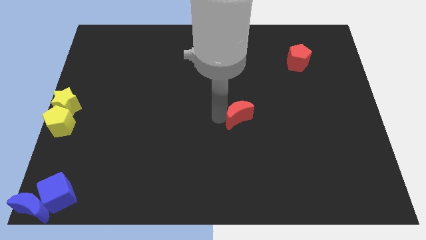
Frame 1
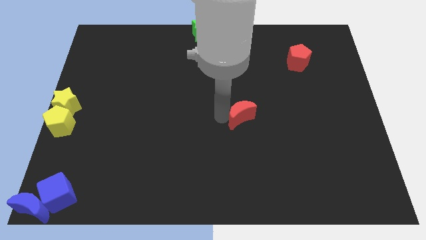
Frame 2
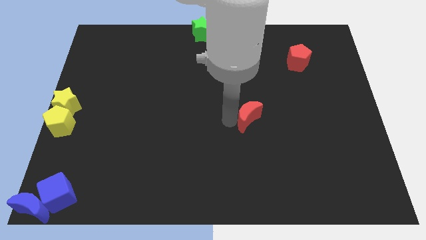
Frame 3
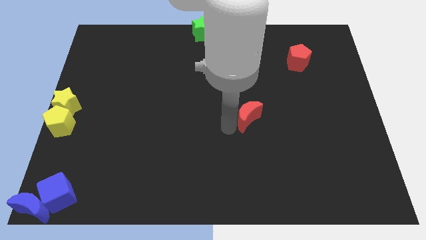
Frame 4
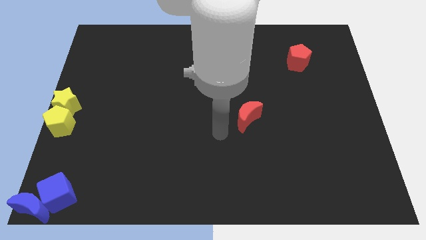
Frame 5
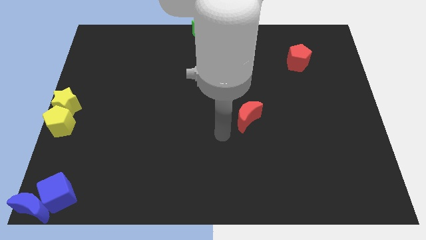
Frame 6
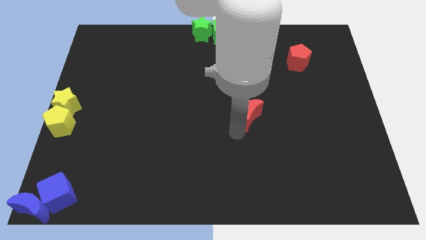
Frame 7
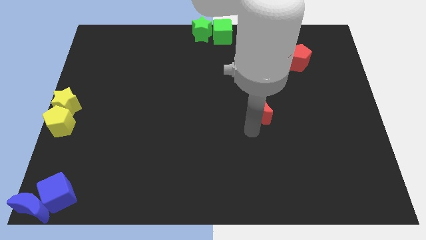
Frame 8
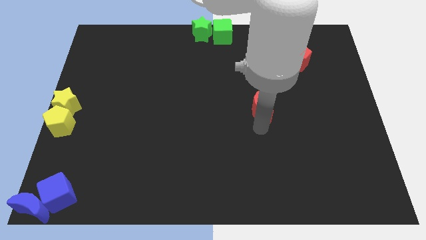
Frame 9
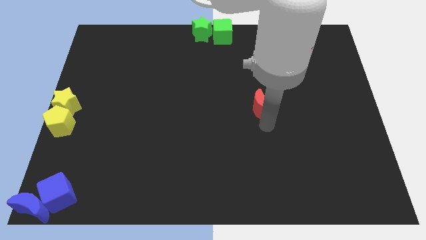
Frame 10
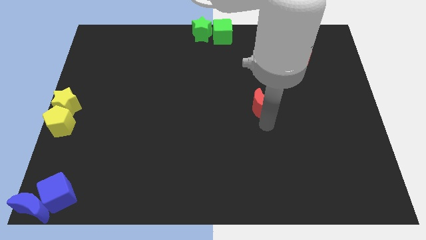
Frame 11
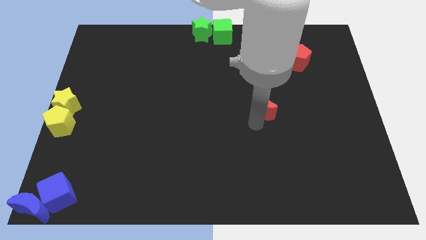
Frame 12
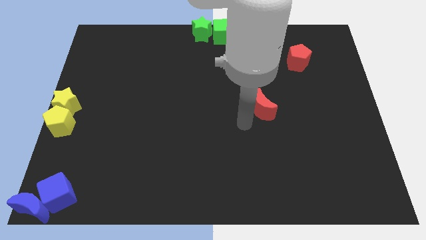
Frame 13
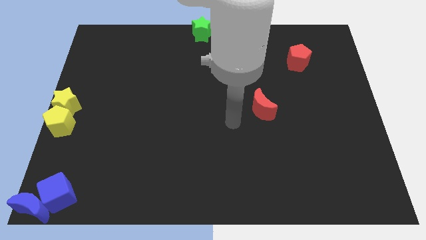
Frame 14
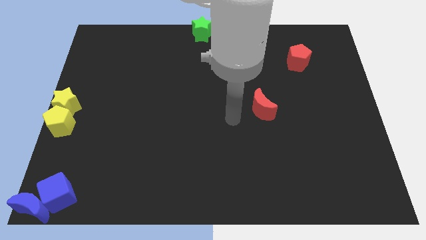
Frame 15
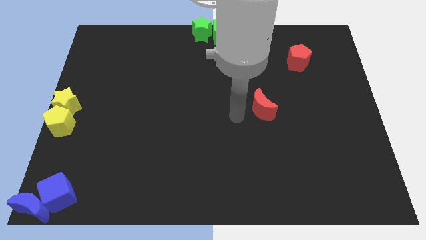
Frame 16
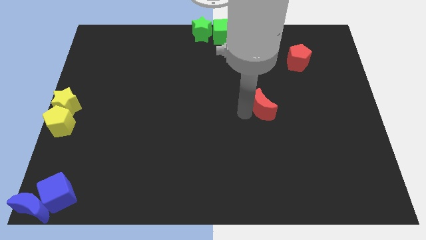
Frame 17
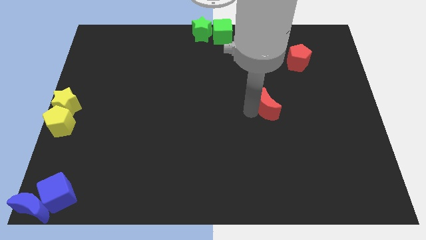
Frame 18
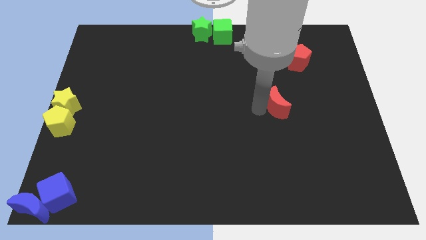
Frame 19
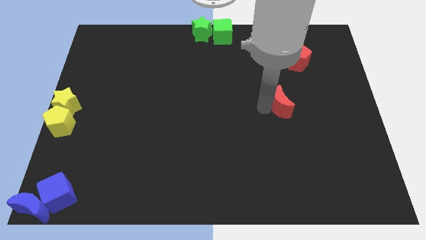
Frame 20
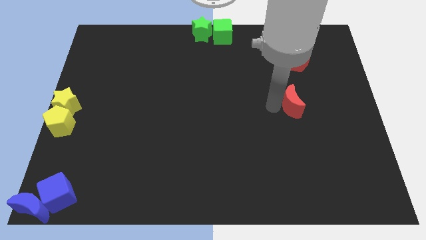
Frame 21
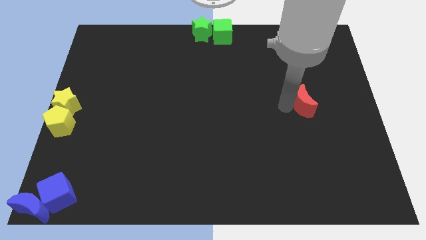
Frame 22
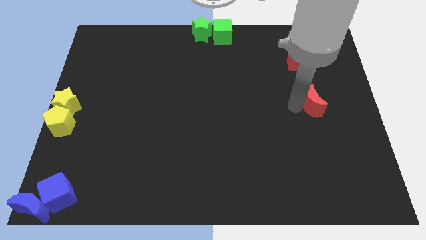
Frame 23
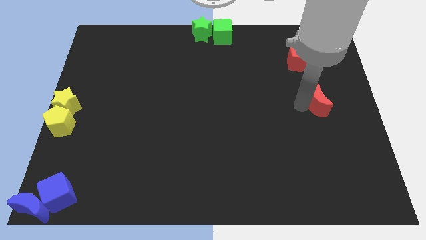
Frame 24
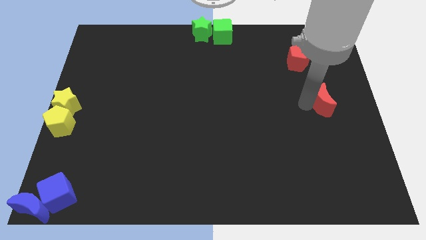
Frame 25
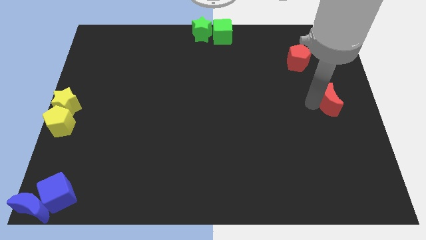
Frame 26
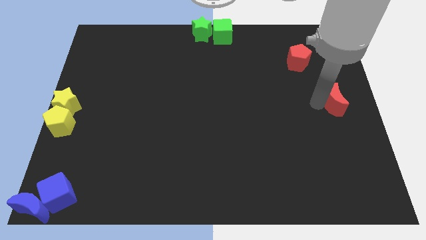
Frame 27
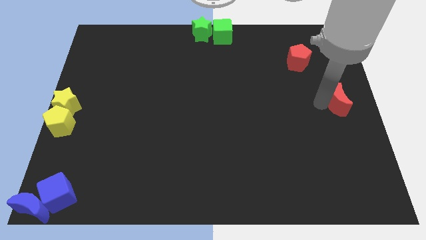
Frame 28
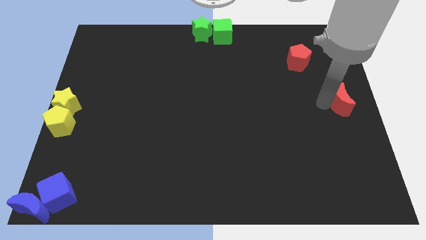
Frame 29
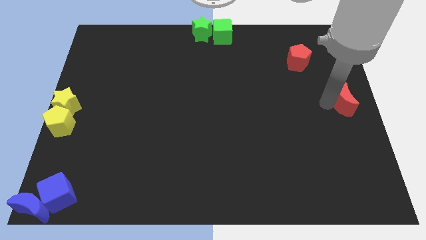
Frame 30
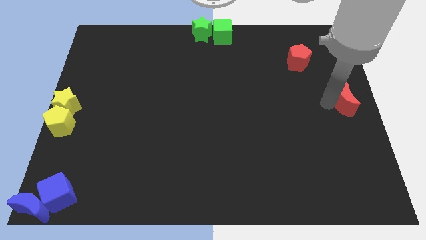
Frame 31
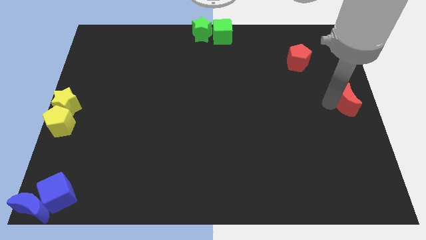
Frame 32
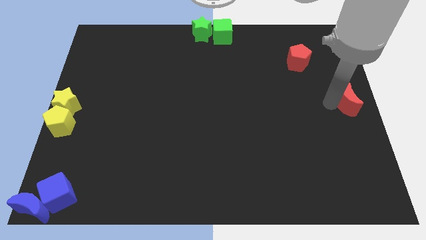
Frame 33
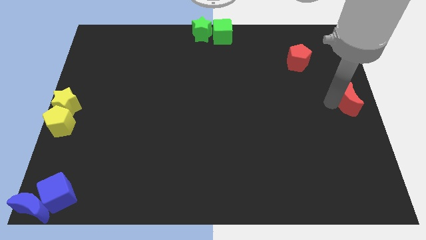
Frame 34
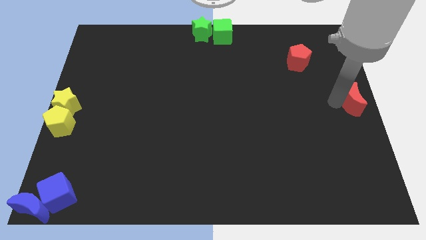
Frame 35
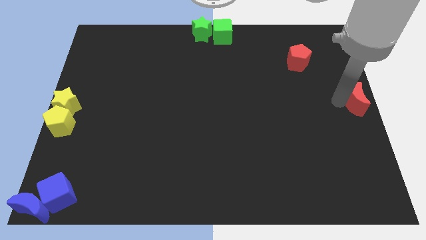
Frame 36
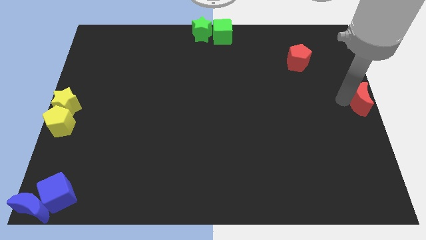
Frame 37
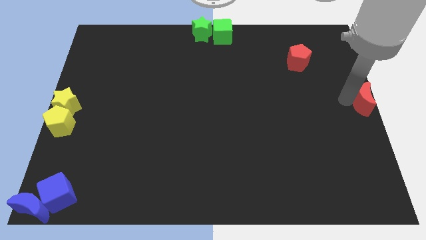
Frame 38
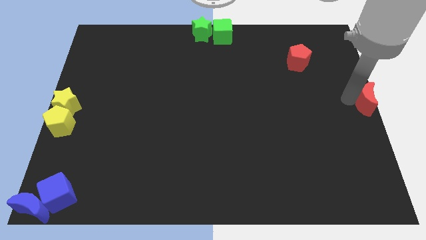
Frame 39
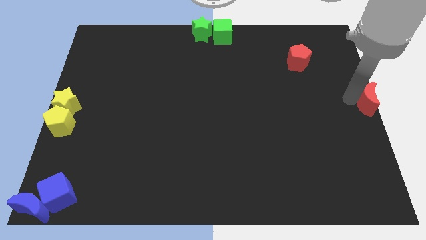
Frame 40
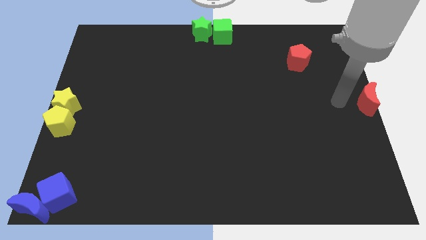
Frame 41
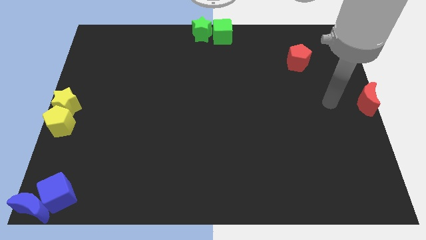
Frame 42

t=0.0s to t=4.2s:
move the red crescent to the right center of the board

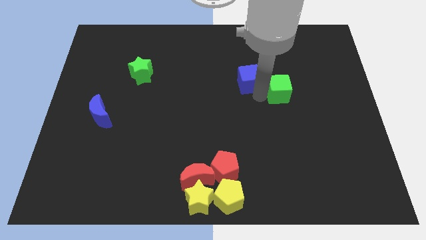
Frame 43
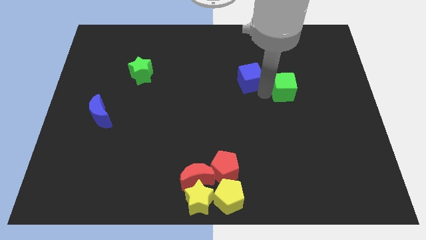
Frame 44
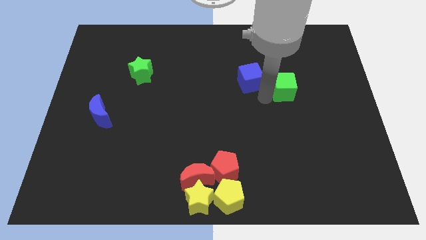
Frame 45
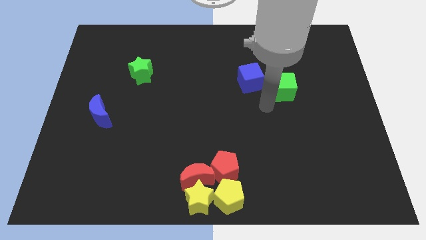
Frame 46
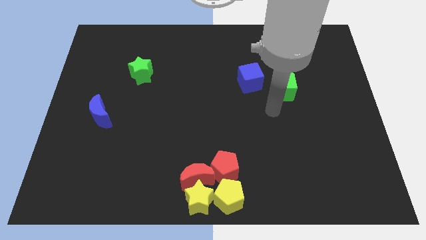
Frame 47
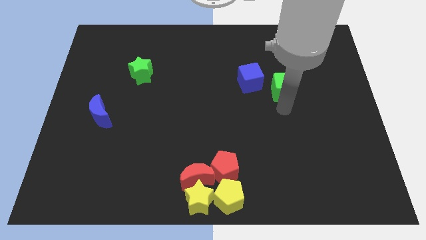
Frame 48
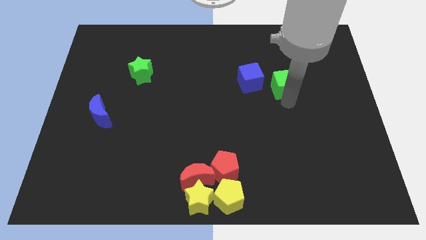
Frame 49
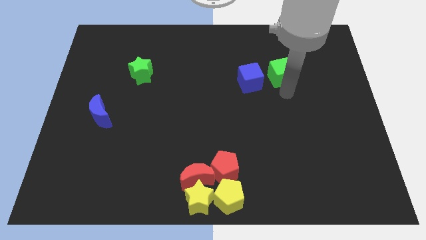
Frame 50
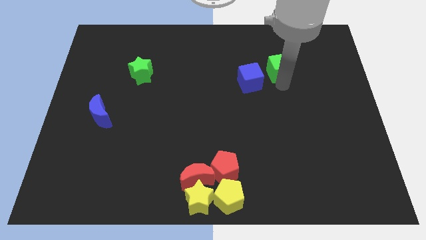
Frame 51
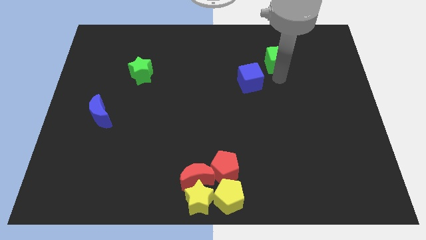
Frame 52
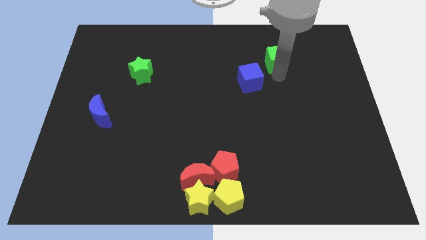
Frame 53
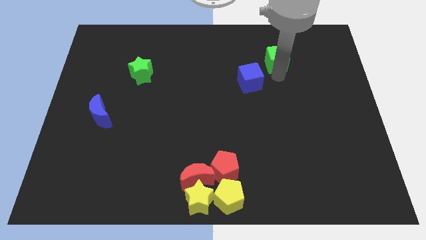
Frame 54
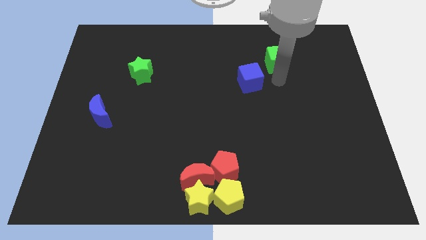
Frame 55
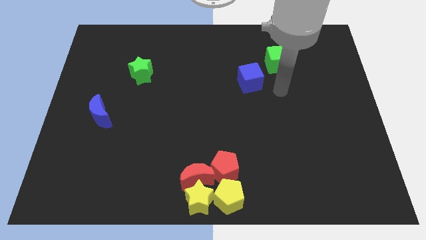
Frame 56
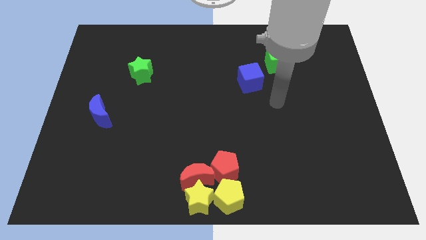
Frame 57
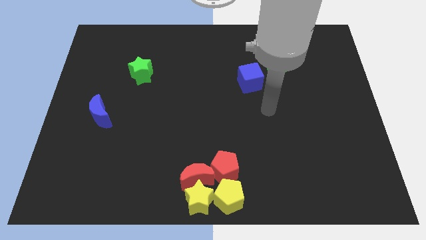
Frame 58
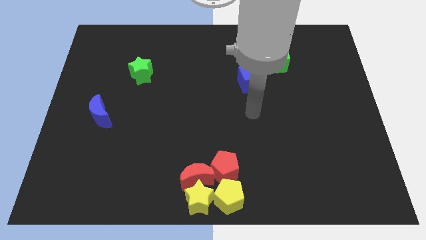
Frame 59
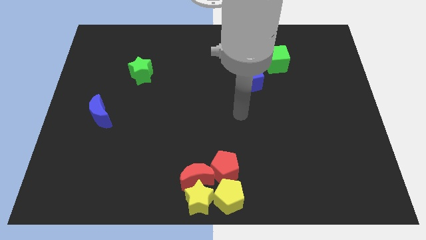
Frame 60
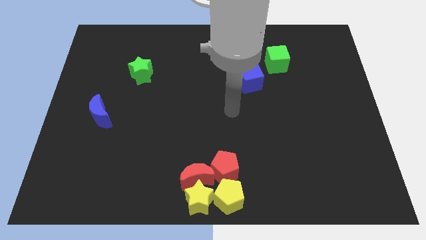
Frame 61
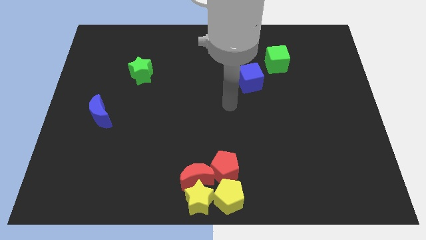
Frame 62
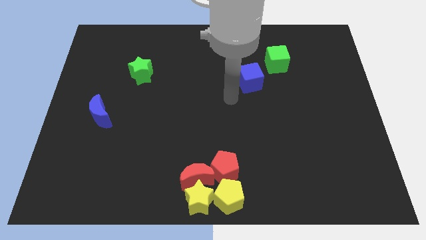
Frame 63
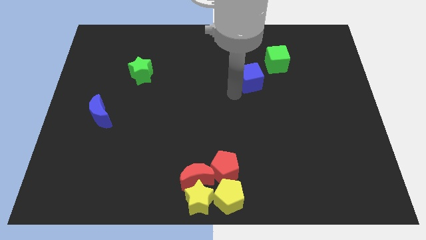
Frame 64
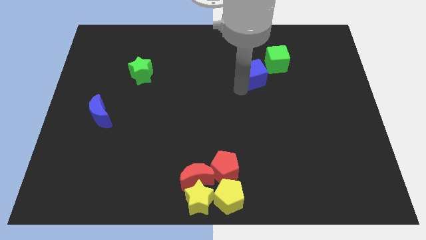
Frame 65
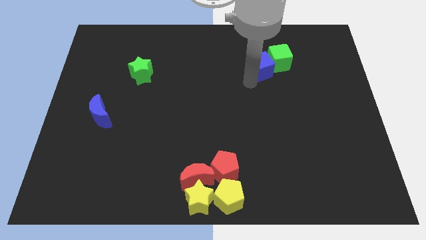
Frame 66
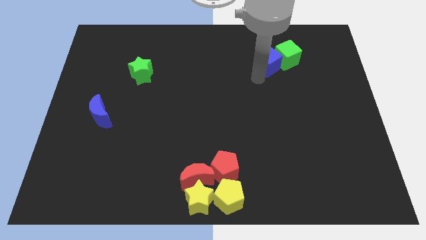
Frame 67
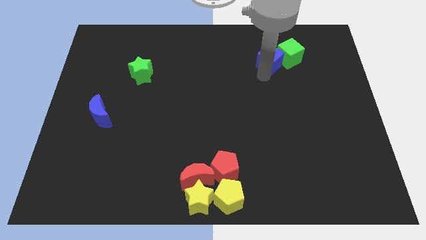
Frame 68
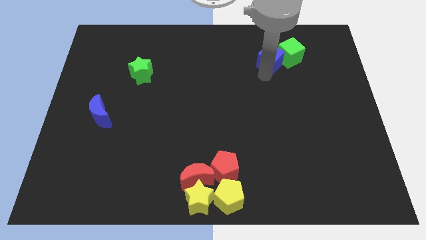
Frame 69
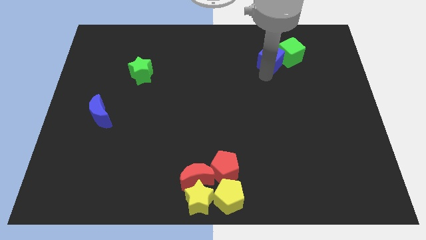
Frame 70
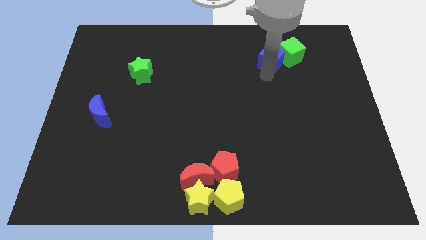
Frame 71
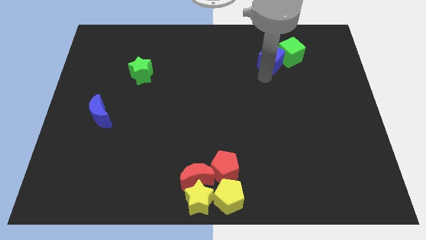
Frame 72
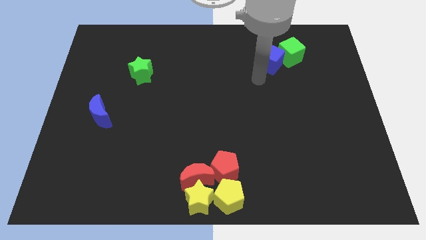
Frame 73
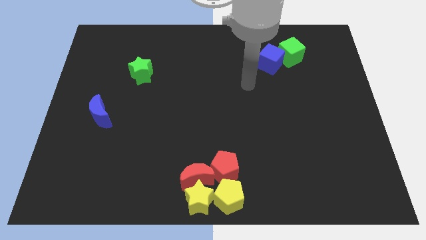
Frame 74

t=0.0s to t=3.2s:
place blue cube and green cube towards top of the board

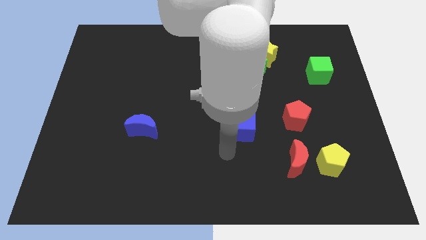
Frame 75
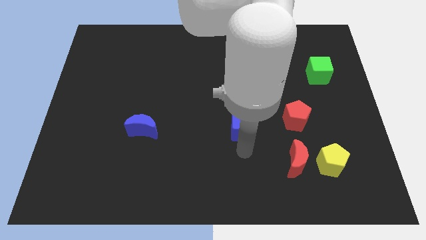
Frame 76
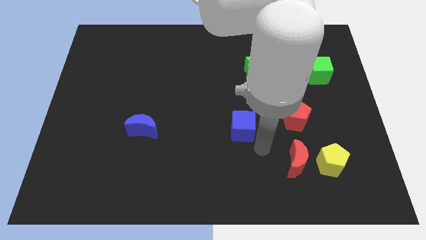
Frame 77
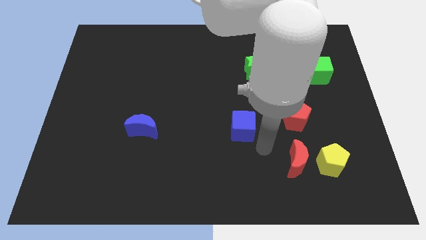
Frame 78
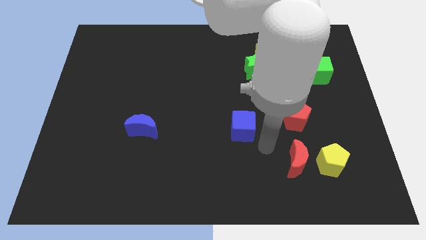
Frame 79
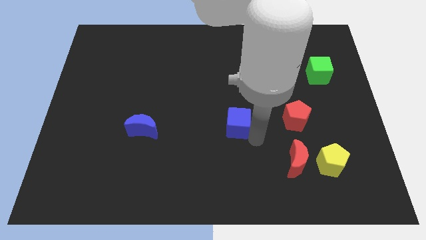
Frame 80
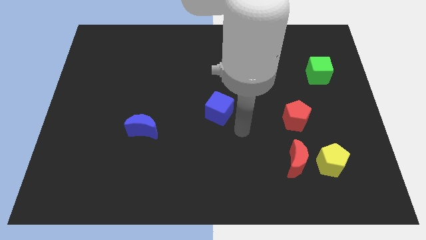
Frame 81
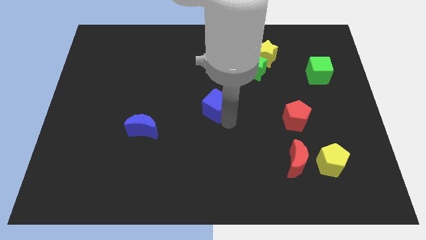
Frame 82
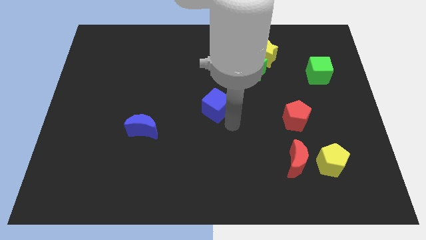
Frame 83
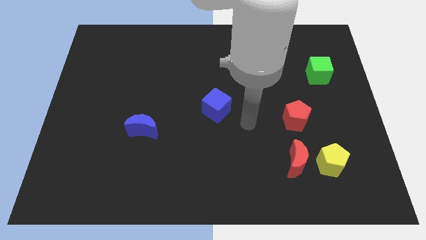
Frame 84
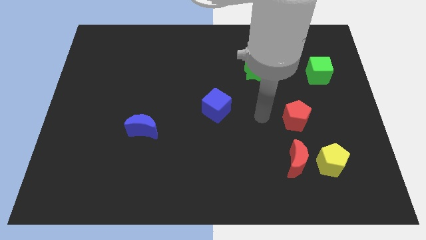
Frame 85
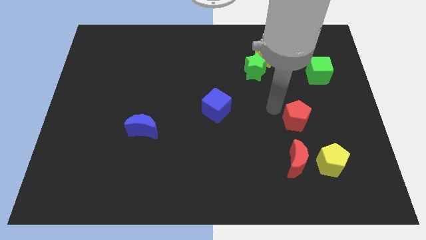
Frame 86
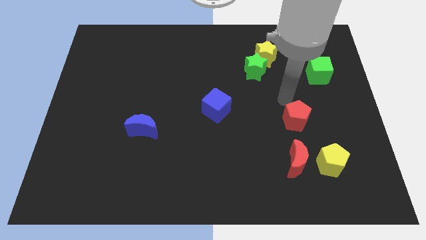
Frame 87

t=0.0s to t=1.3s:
place the blue cube diagonally bottom left to the green star

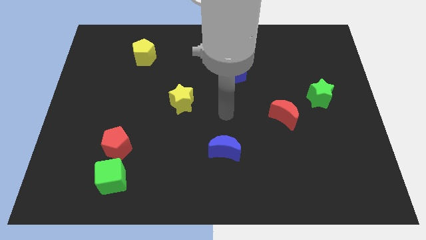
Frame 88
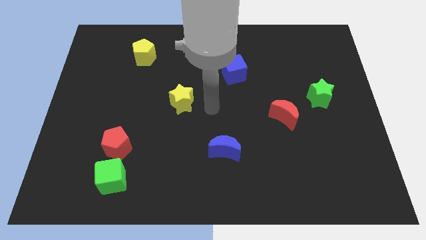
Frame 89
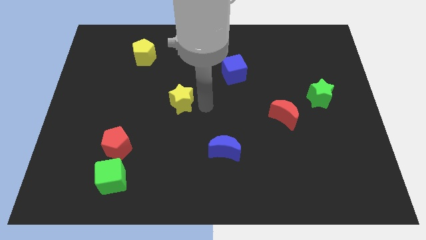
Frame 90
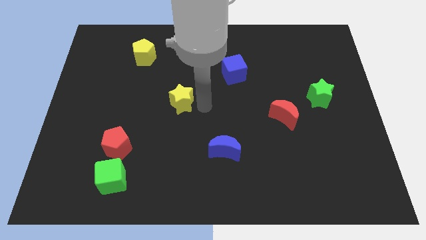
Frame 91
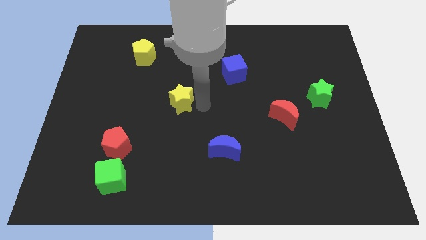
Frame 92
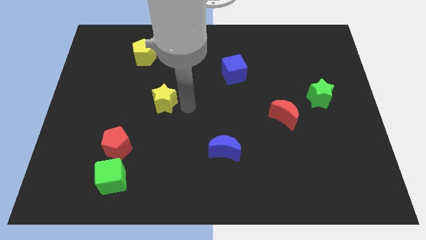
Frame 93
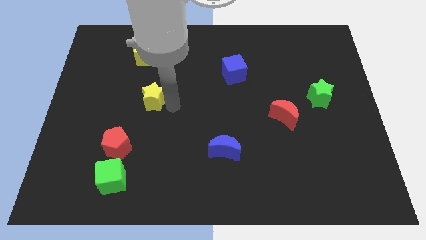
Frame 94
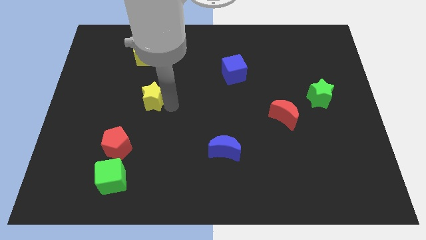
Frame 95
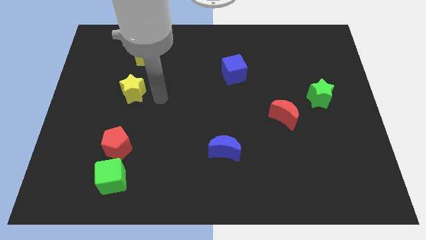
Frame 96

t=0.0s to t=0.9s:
push the yellow star vertically above the red pentagon
